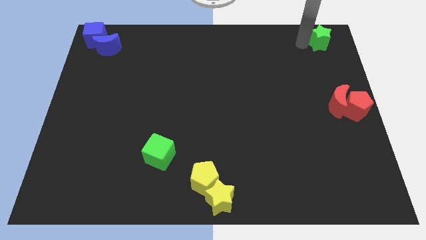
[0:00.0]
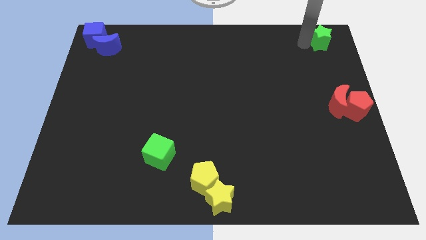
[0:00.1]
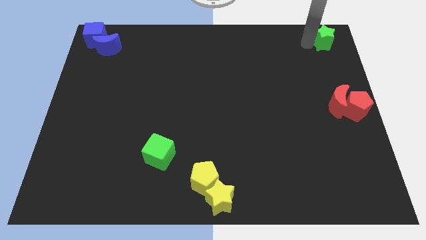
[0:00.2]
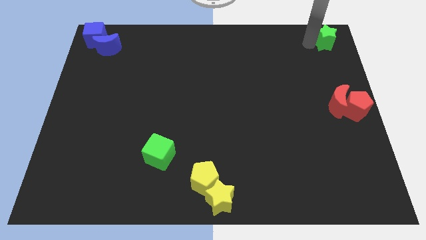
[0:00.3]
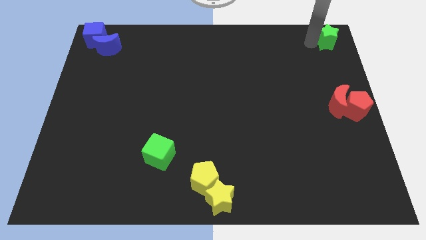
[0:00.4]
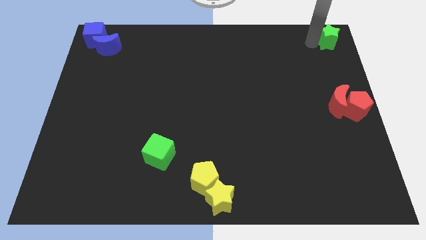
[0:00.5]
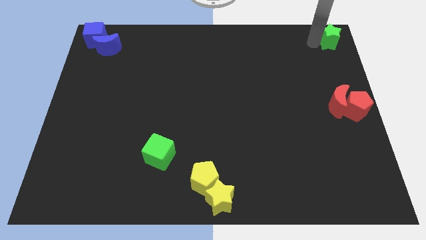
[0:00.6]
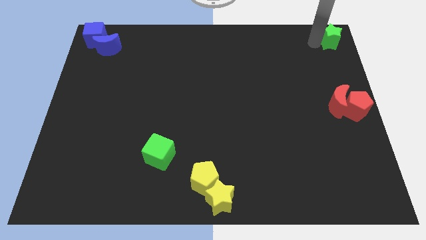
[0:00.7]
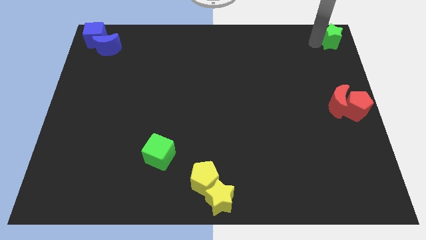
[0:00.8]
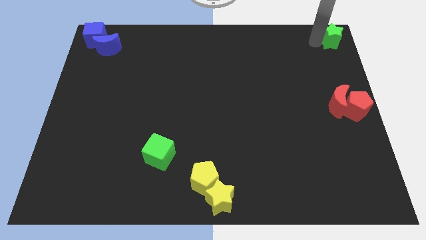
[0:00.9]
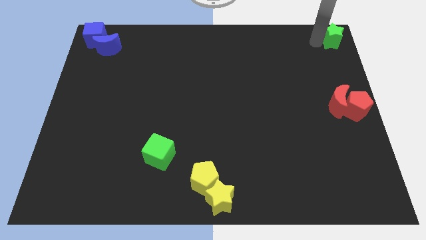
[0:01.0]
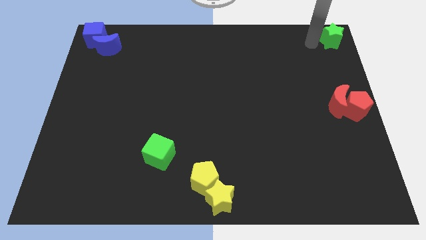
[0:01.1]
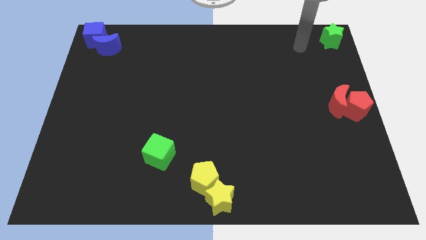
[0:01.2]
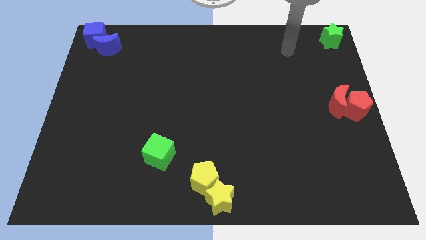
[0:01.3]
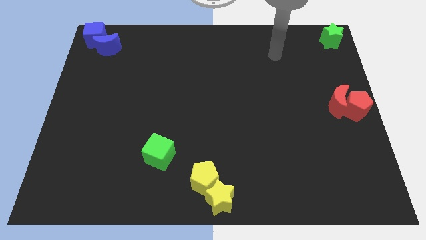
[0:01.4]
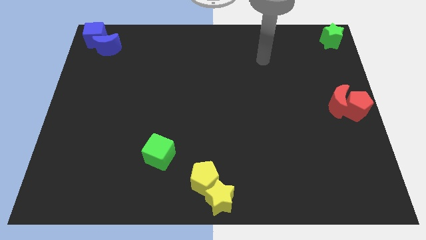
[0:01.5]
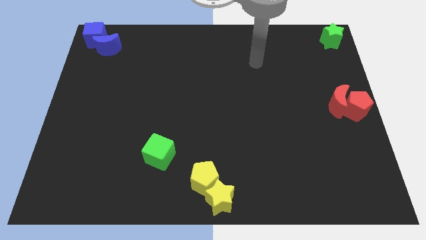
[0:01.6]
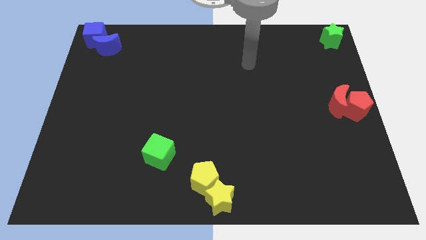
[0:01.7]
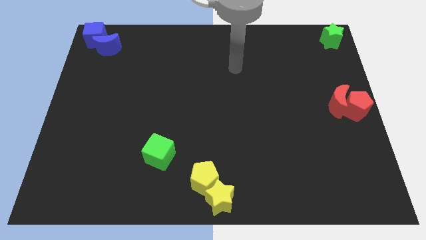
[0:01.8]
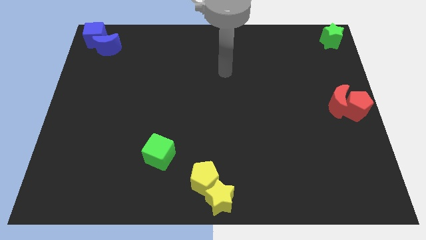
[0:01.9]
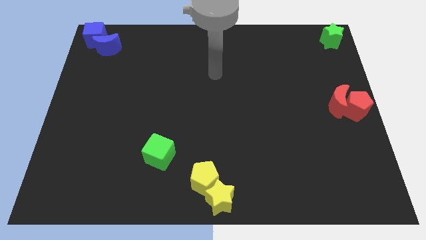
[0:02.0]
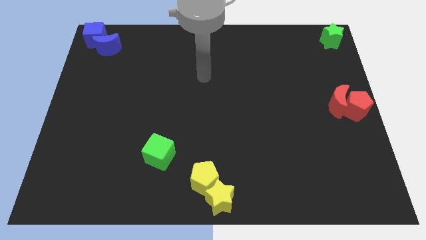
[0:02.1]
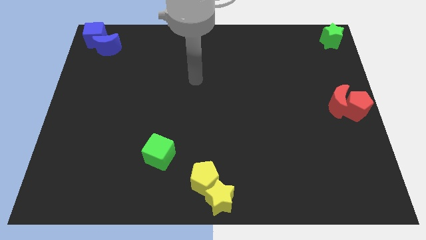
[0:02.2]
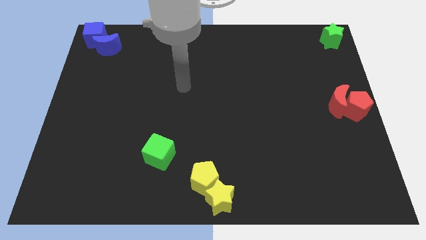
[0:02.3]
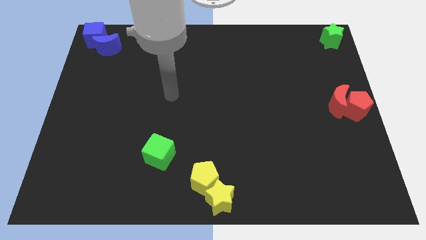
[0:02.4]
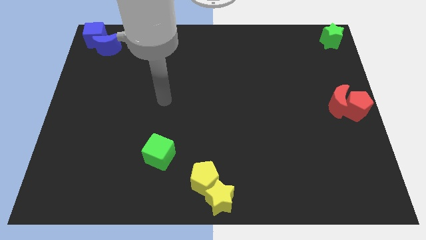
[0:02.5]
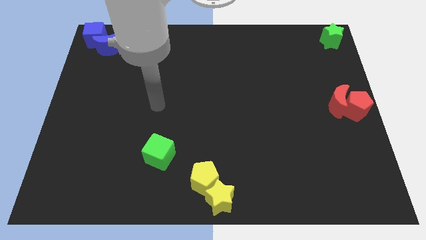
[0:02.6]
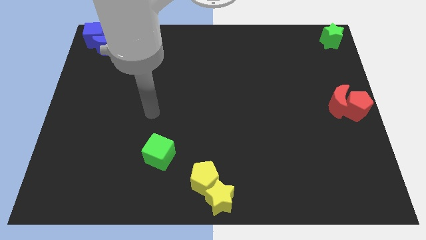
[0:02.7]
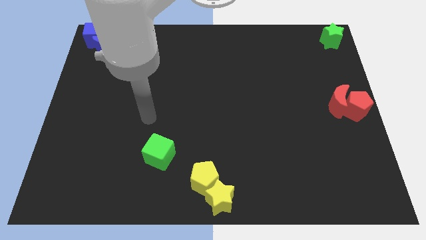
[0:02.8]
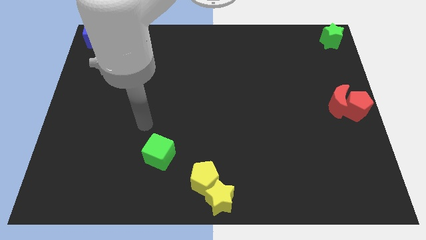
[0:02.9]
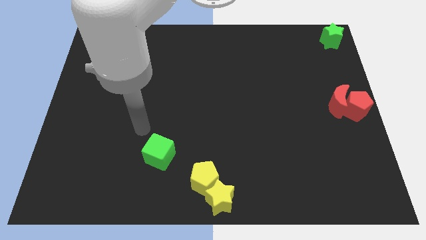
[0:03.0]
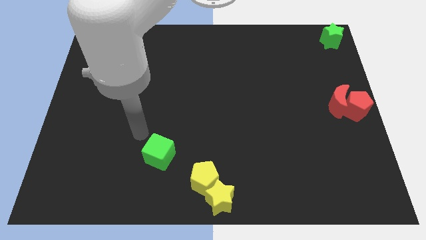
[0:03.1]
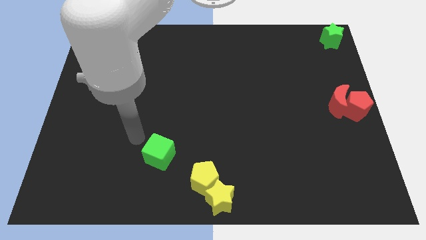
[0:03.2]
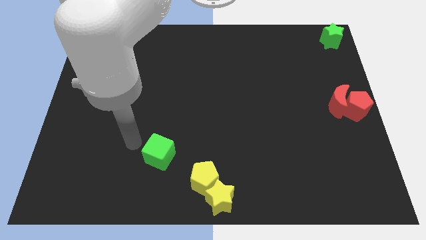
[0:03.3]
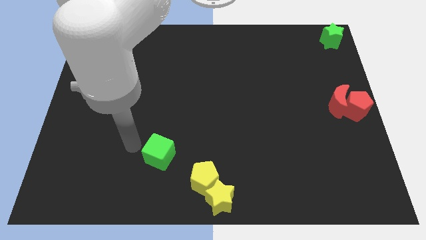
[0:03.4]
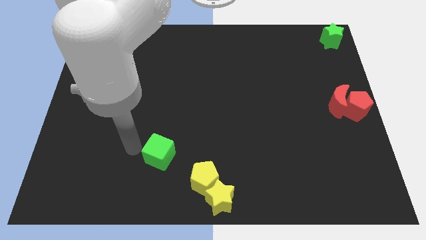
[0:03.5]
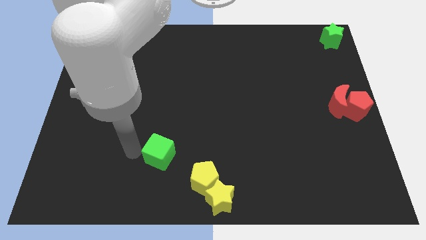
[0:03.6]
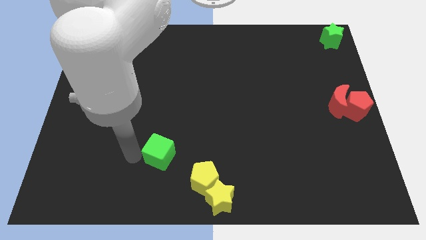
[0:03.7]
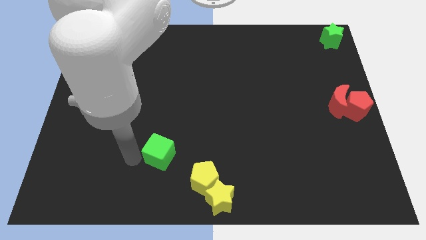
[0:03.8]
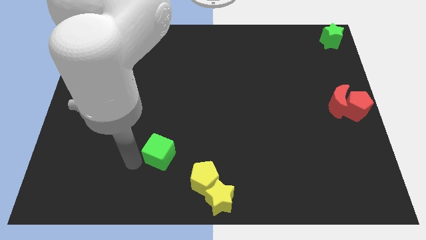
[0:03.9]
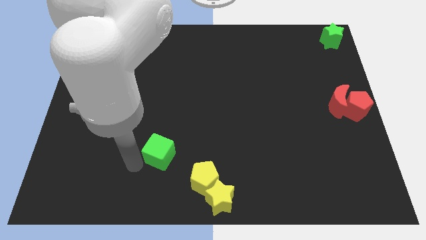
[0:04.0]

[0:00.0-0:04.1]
move your arm from green star to green cube

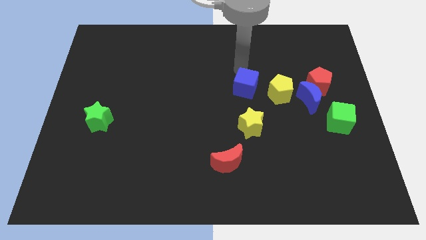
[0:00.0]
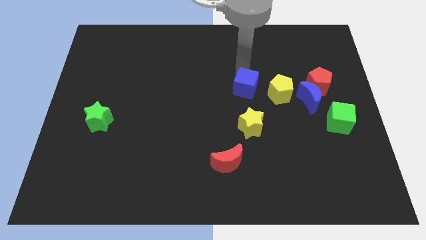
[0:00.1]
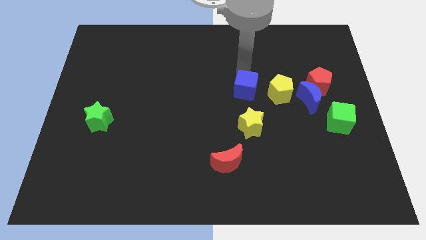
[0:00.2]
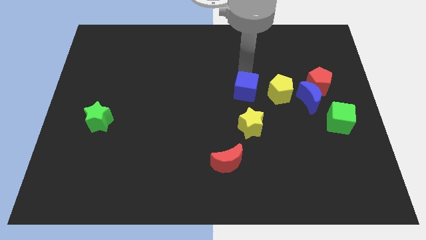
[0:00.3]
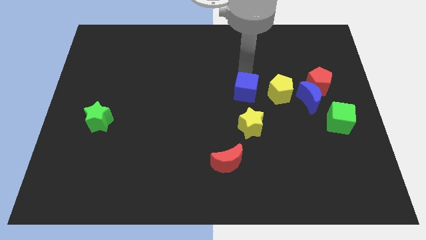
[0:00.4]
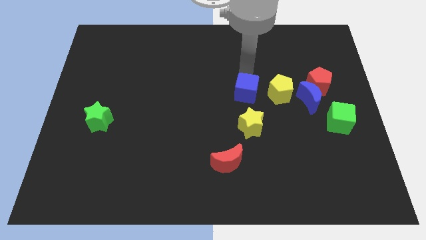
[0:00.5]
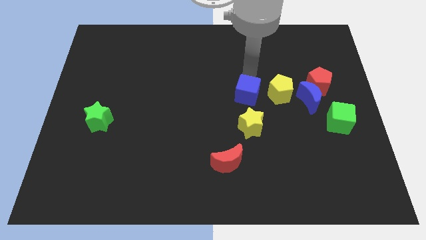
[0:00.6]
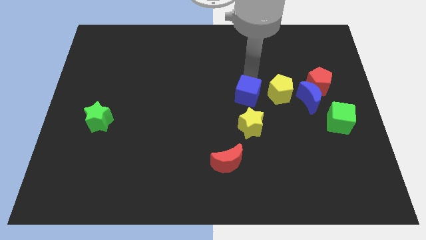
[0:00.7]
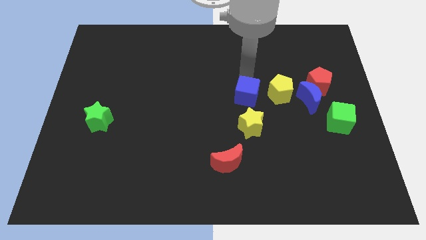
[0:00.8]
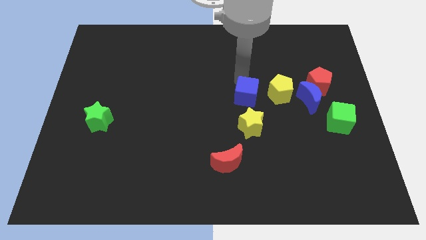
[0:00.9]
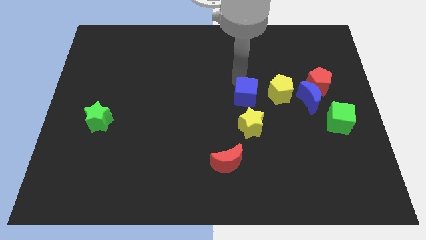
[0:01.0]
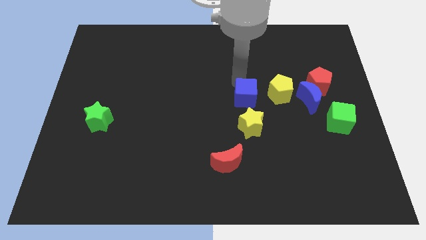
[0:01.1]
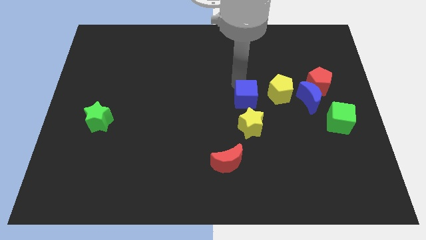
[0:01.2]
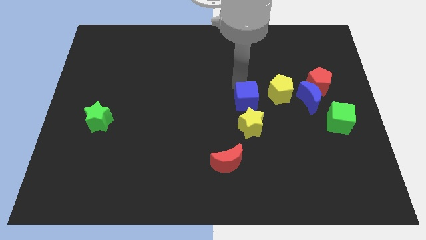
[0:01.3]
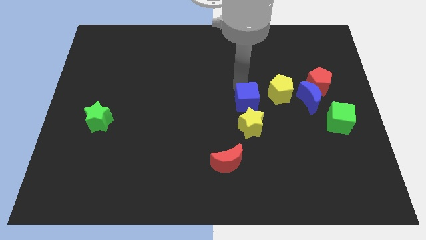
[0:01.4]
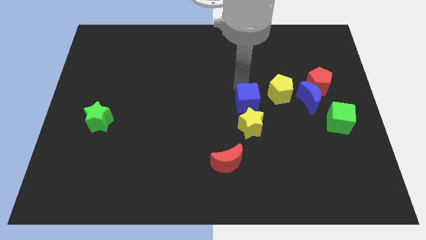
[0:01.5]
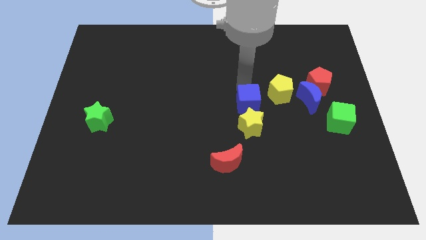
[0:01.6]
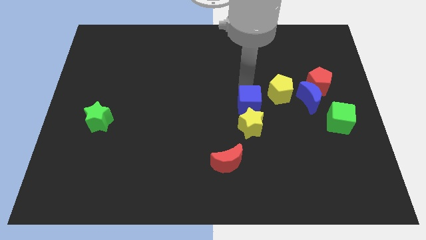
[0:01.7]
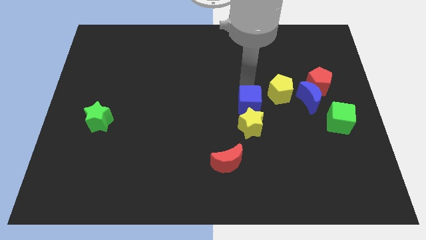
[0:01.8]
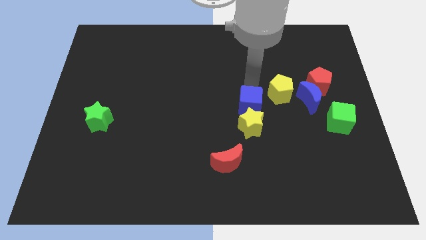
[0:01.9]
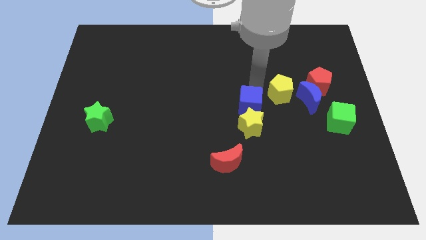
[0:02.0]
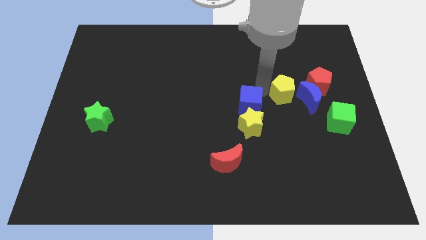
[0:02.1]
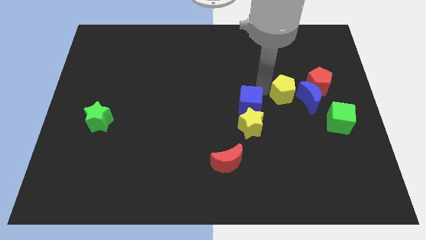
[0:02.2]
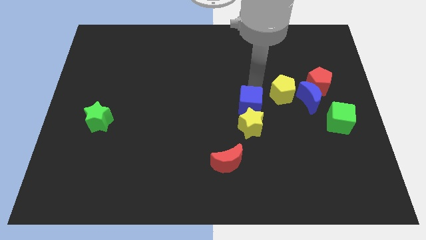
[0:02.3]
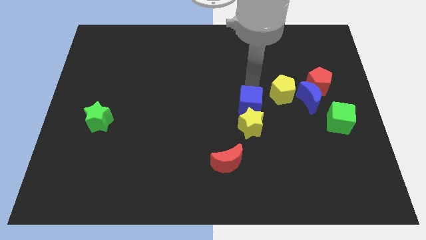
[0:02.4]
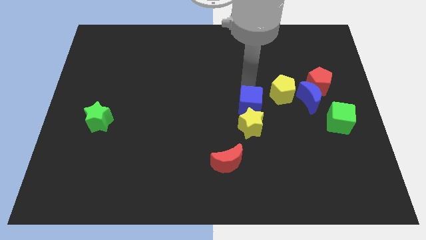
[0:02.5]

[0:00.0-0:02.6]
push the blue cube to the left of the blue crescent

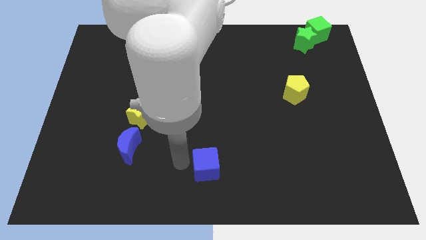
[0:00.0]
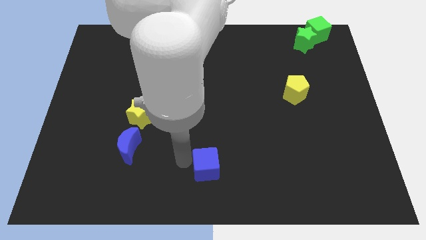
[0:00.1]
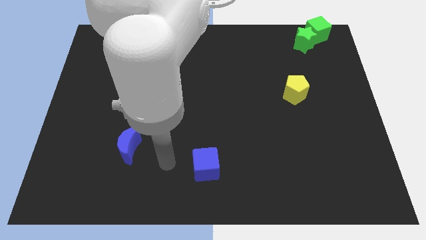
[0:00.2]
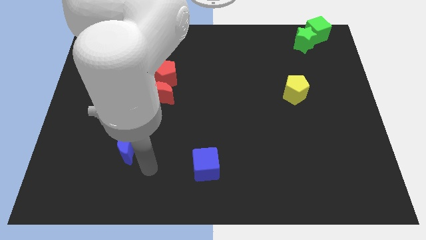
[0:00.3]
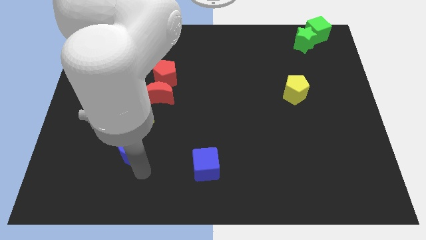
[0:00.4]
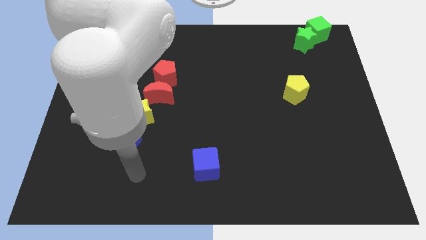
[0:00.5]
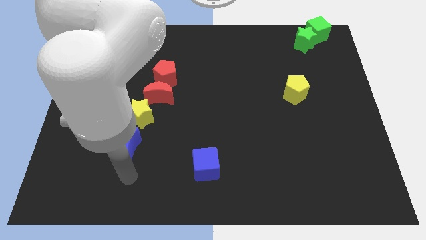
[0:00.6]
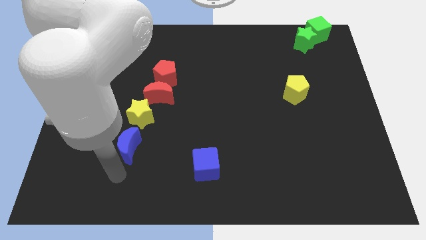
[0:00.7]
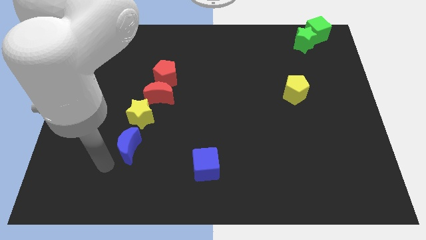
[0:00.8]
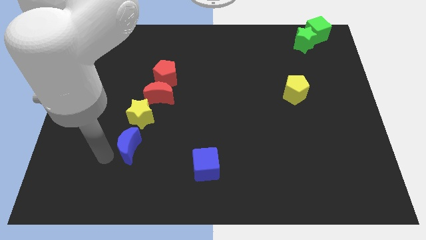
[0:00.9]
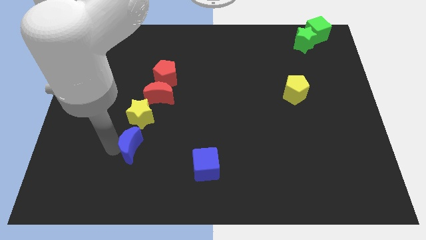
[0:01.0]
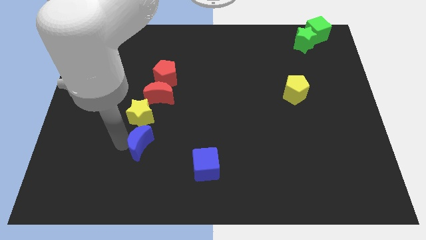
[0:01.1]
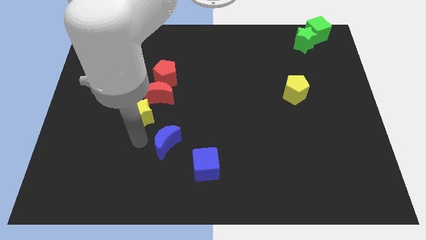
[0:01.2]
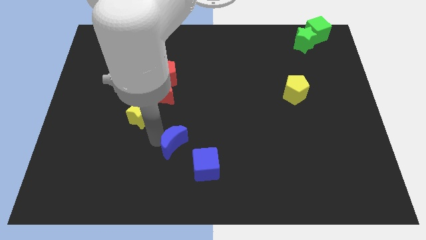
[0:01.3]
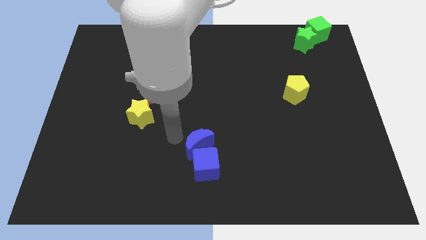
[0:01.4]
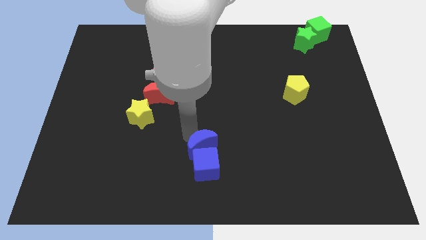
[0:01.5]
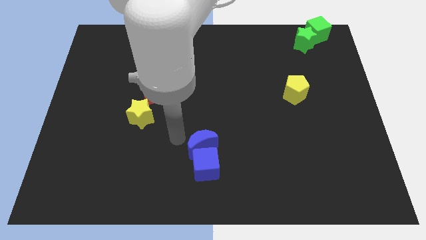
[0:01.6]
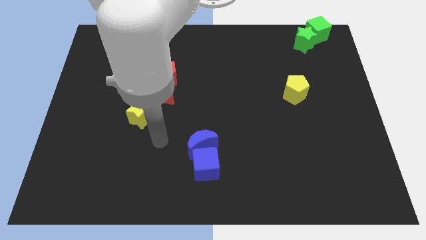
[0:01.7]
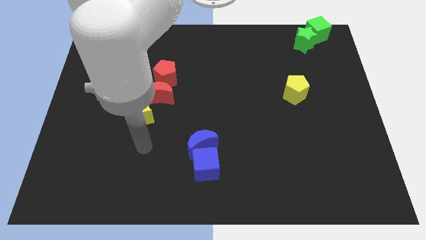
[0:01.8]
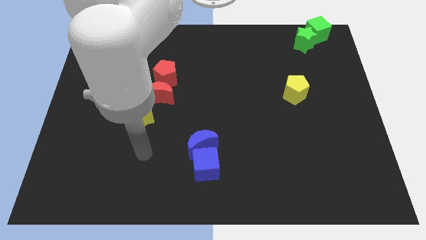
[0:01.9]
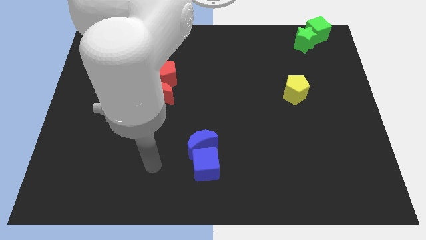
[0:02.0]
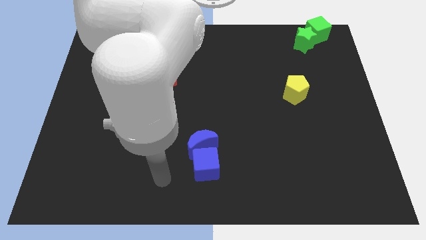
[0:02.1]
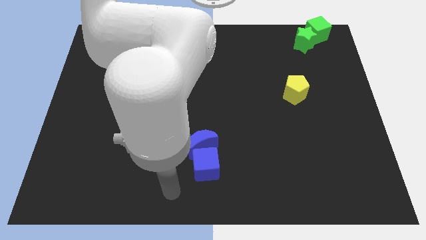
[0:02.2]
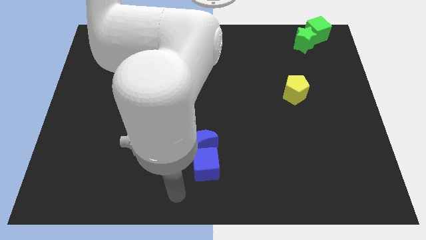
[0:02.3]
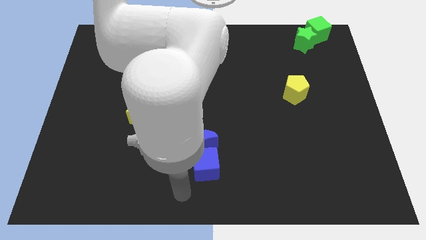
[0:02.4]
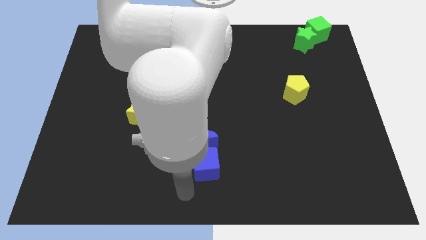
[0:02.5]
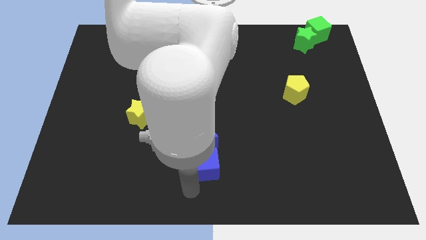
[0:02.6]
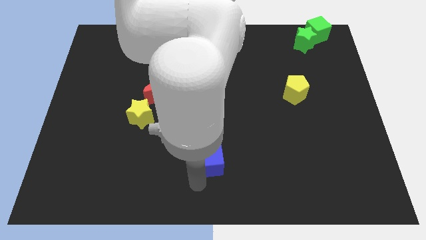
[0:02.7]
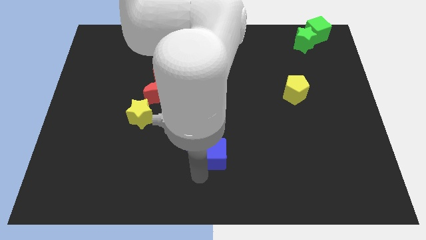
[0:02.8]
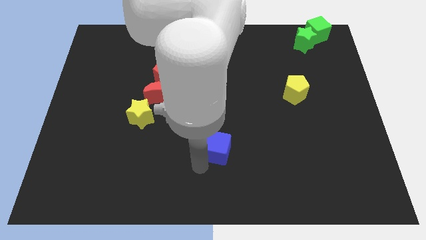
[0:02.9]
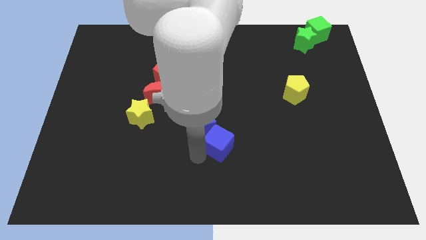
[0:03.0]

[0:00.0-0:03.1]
place the blue moon above the blue cube
